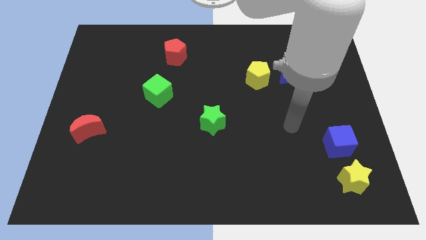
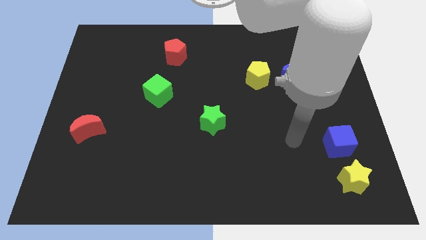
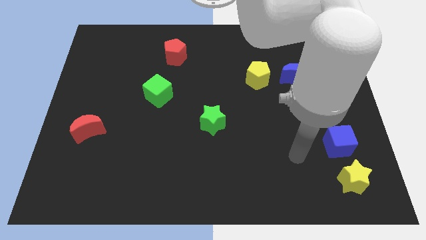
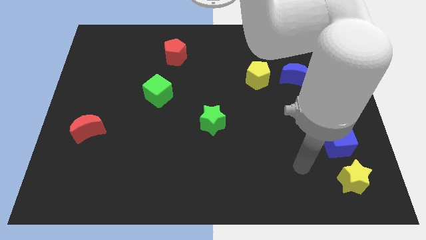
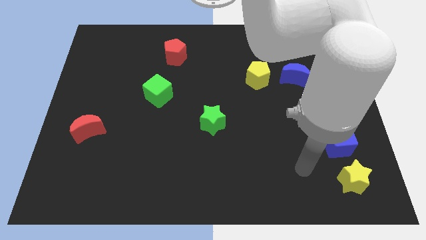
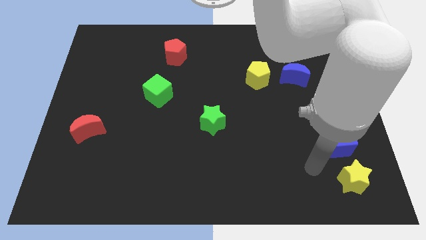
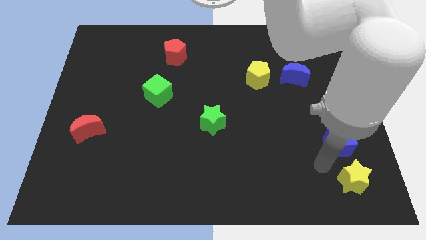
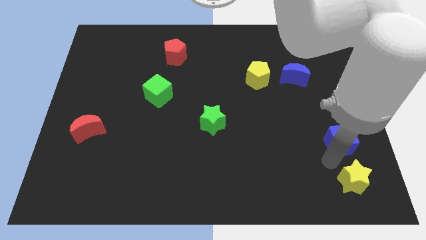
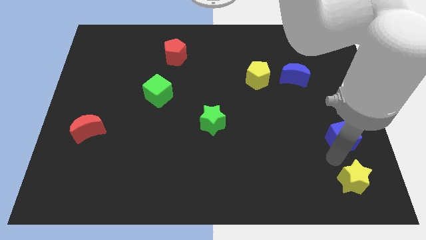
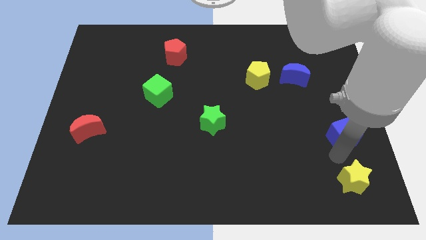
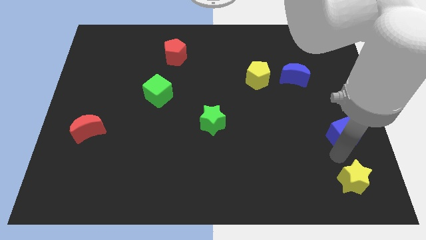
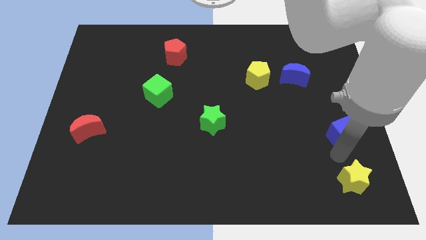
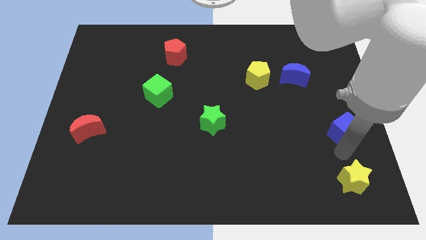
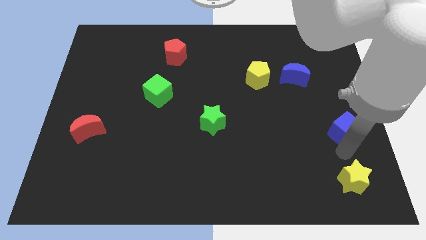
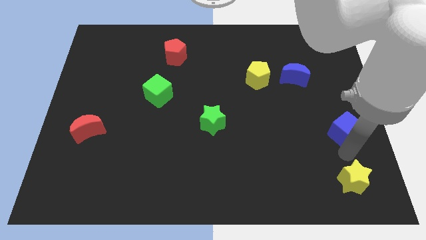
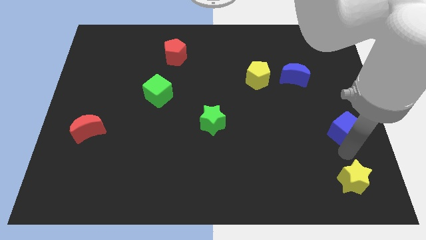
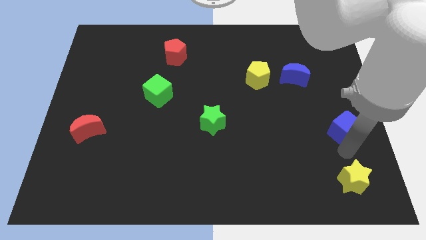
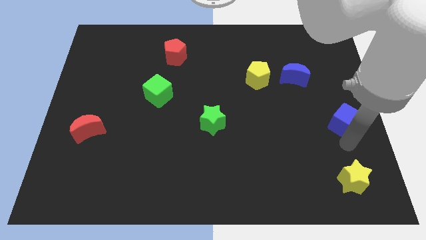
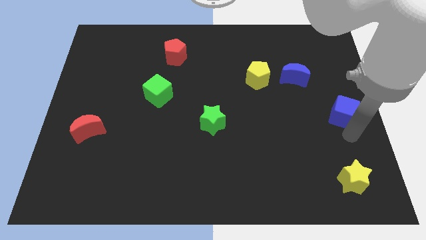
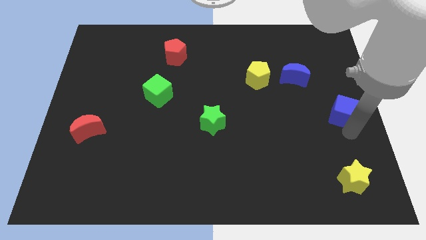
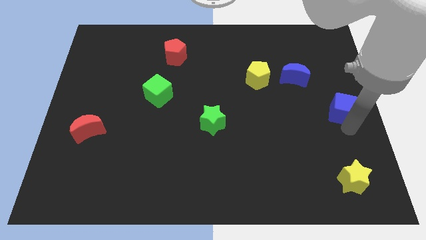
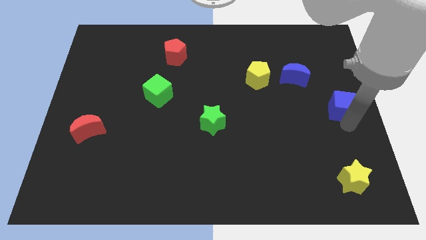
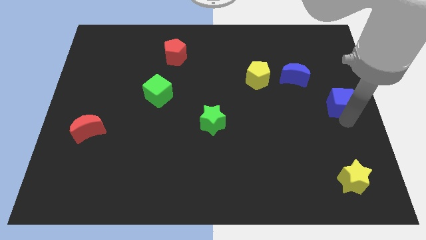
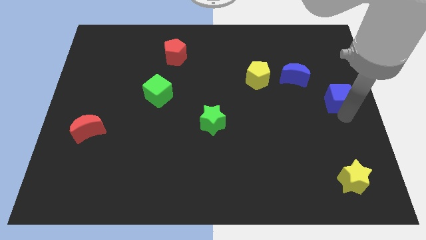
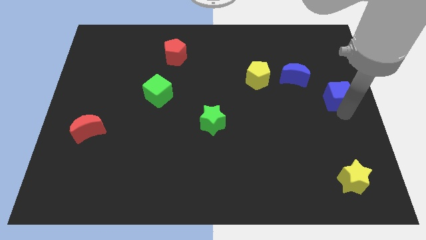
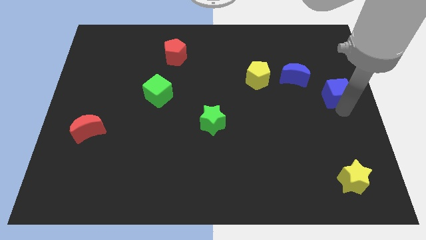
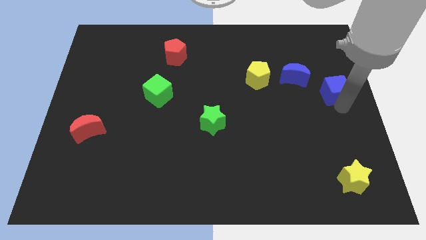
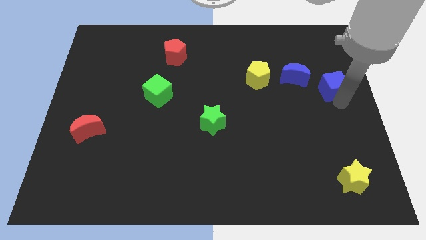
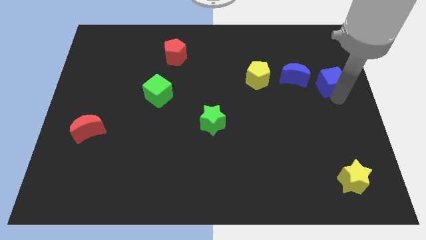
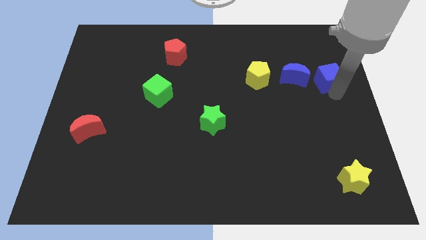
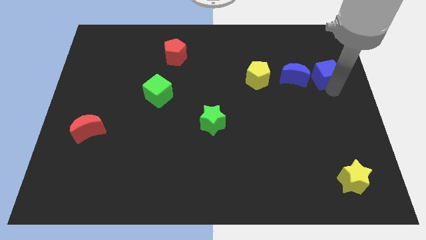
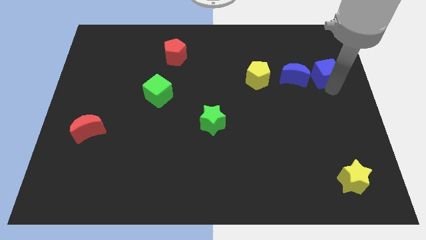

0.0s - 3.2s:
push blue cube beside blue crescent

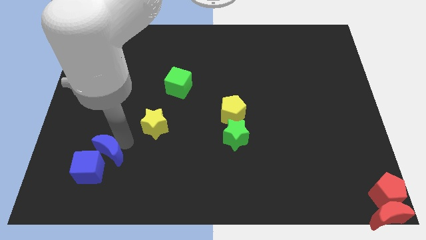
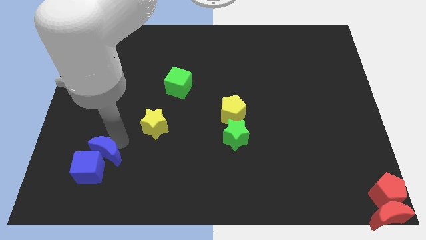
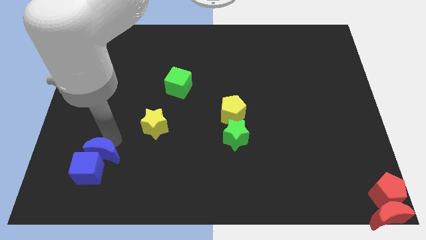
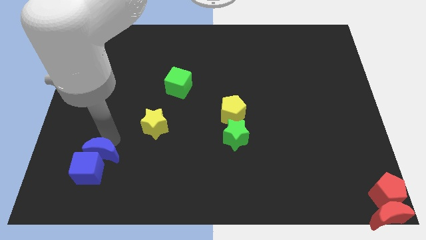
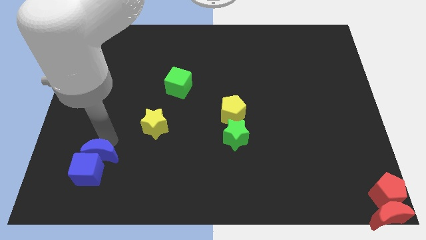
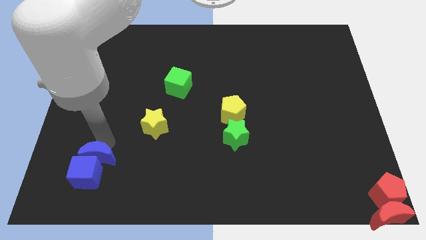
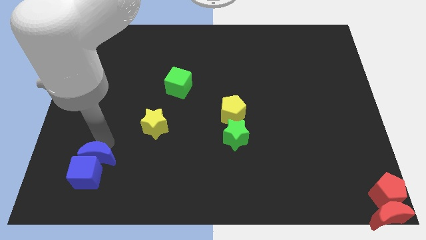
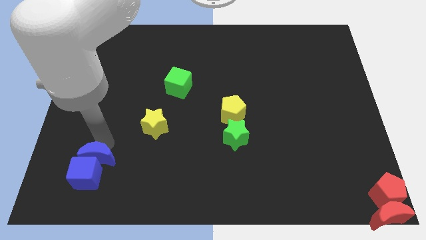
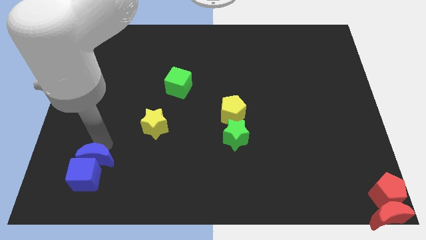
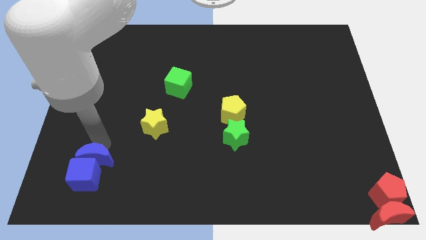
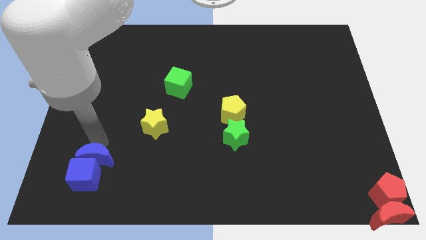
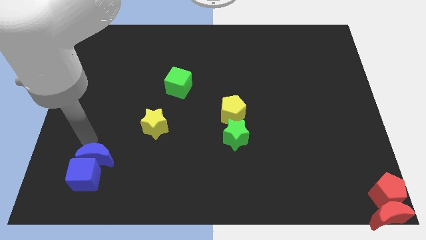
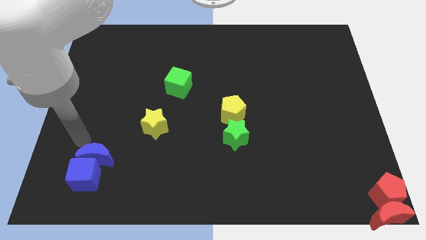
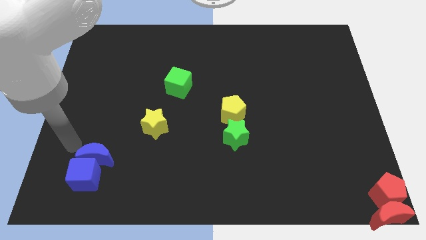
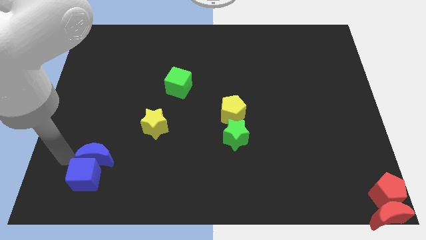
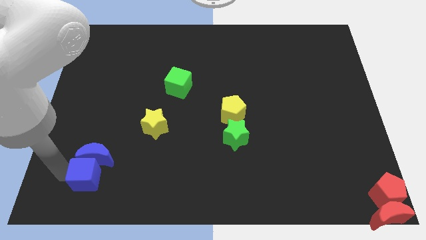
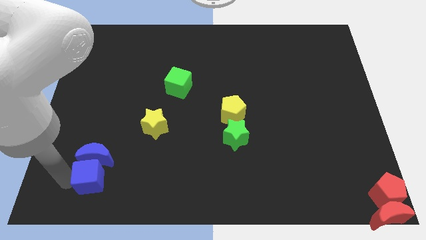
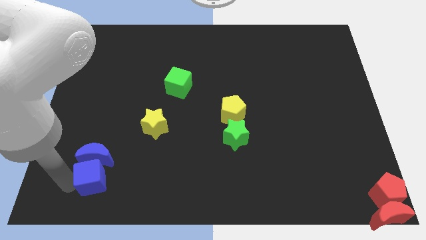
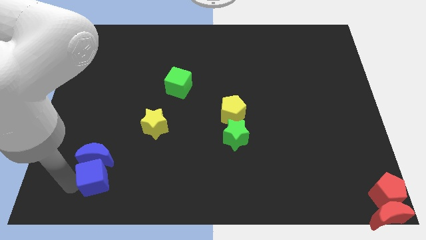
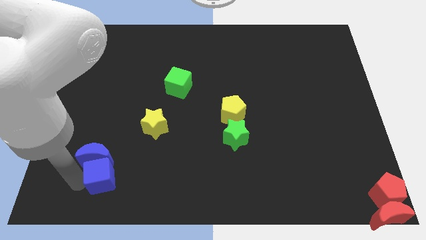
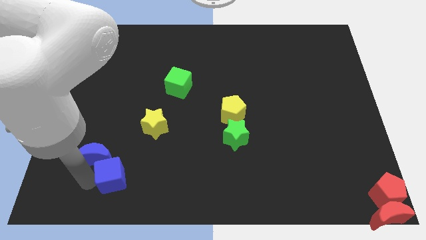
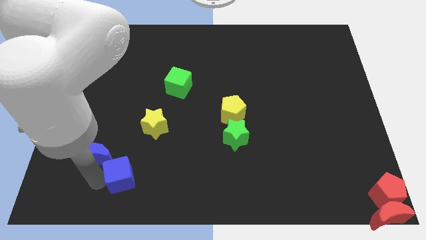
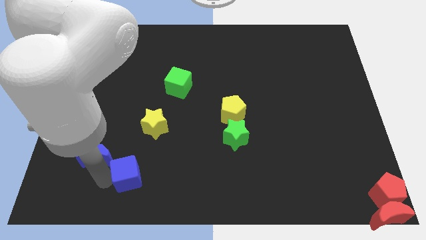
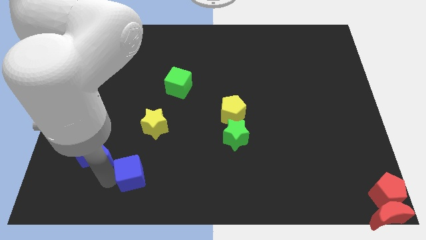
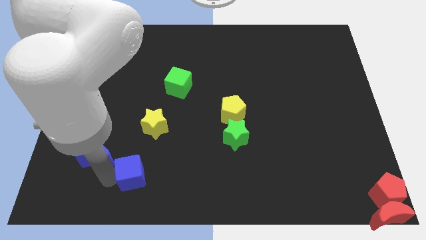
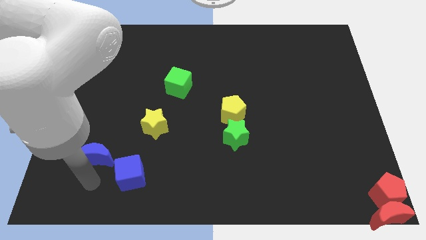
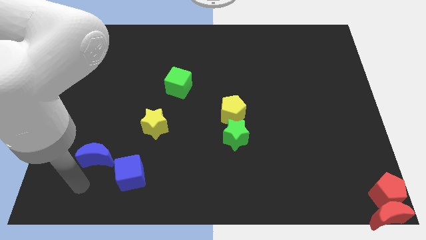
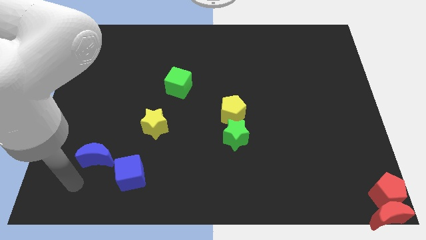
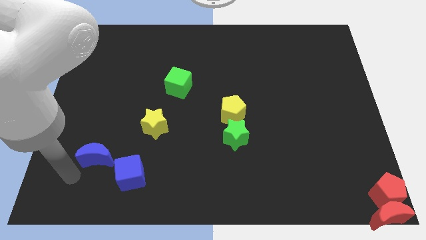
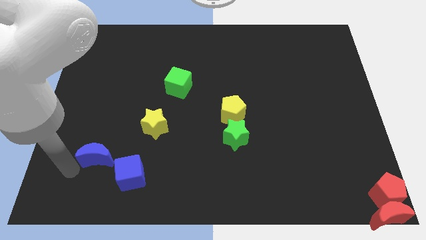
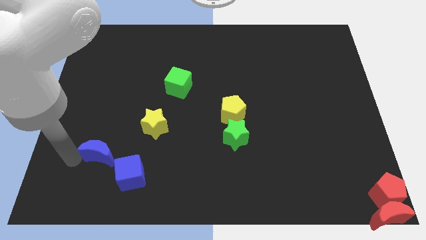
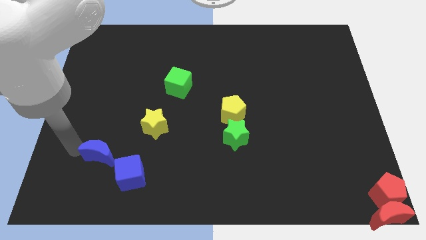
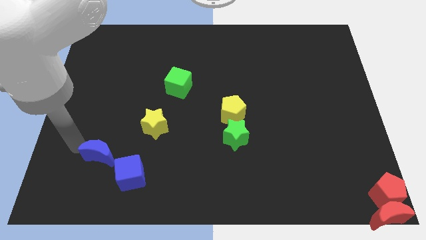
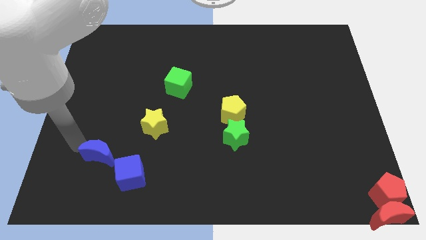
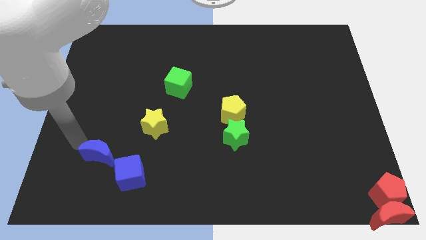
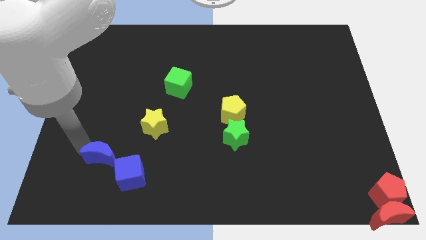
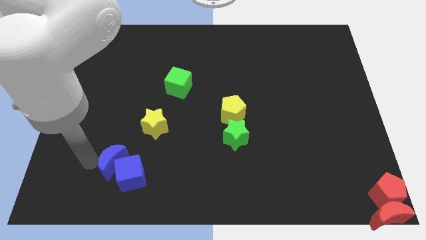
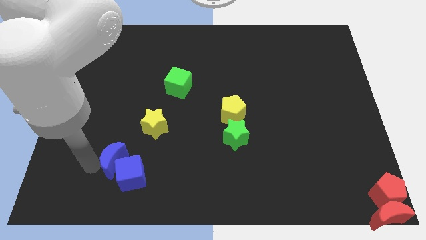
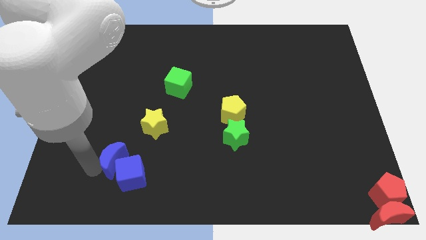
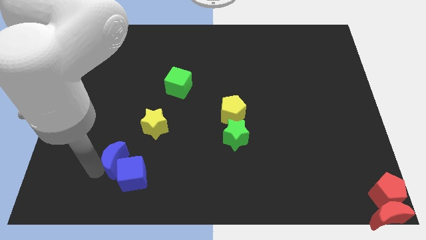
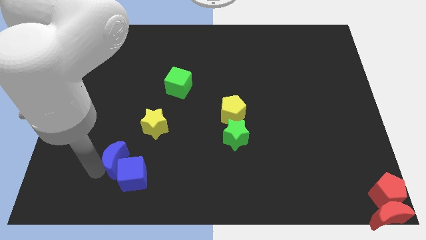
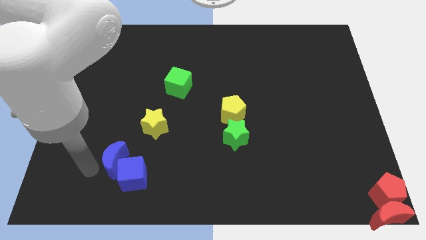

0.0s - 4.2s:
move the blue blocks slightly right of the board

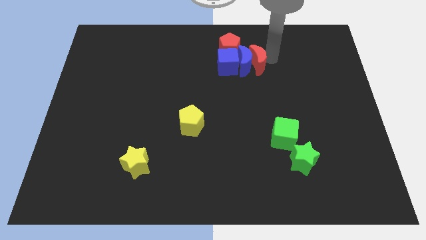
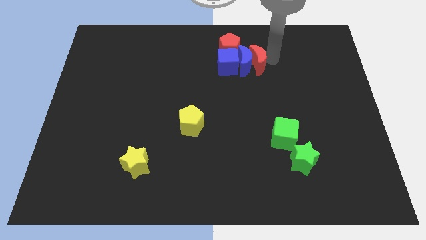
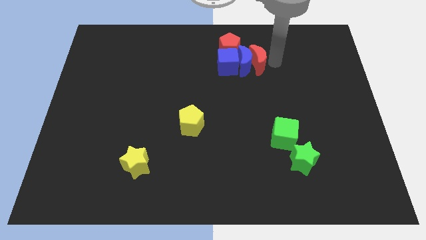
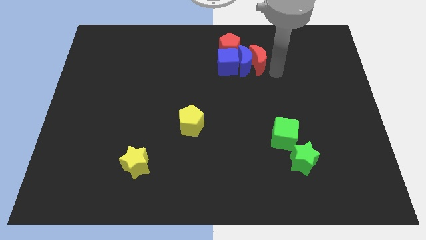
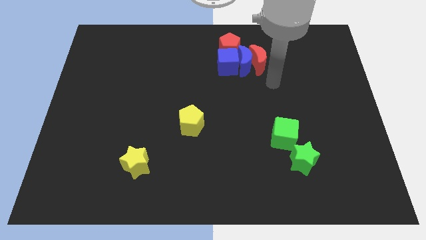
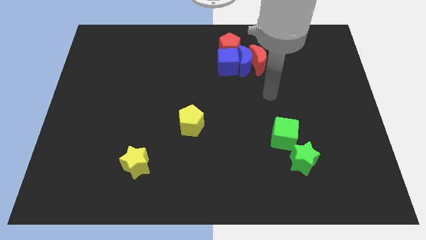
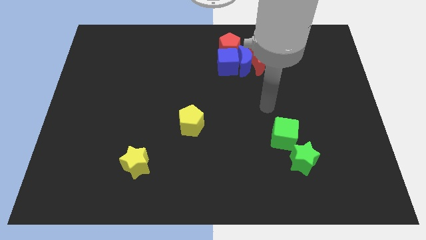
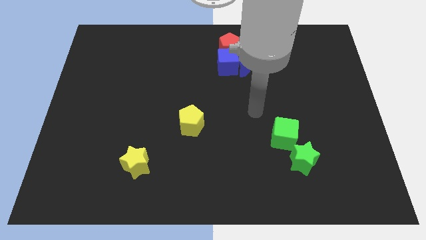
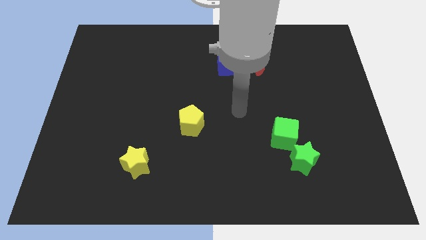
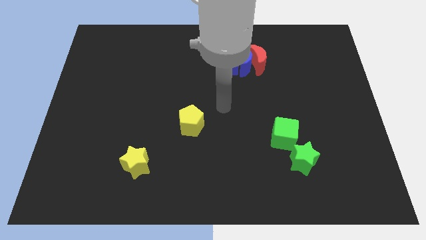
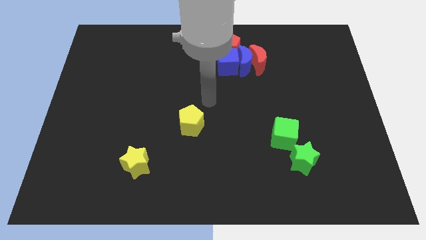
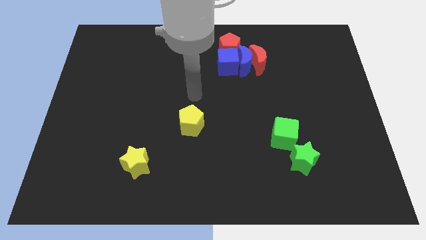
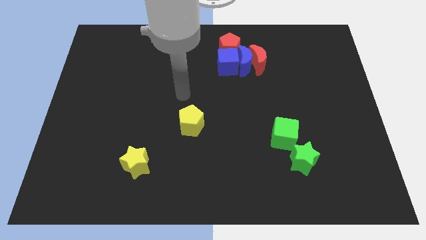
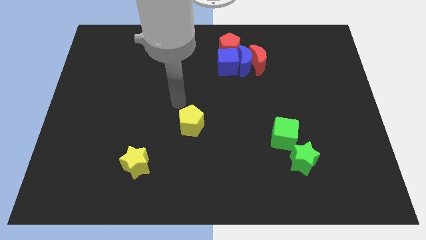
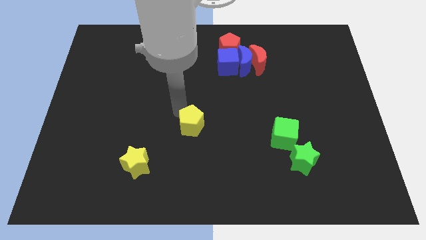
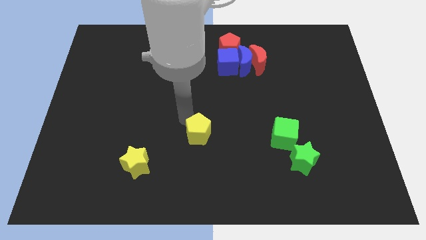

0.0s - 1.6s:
place the arm above the yellow pentagon

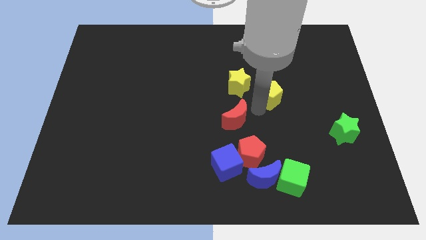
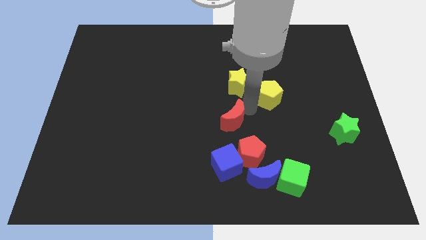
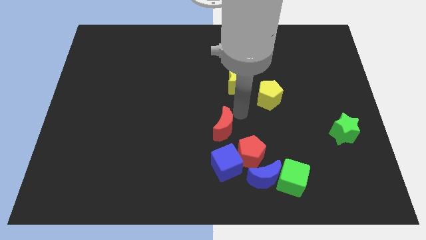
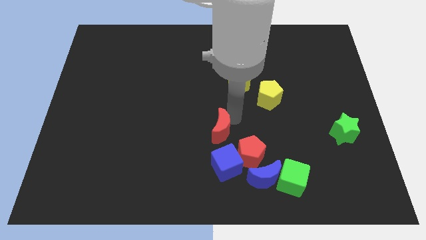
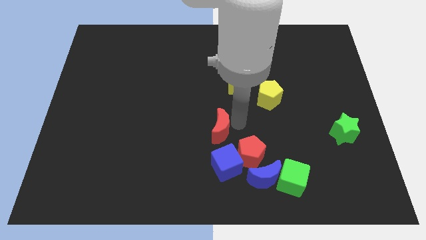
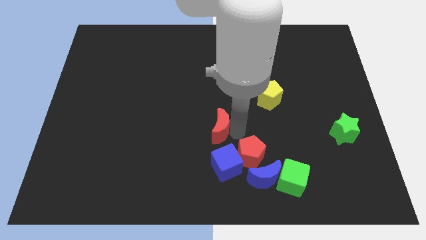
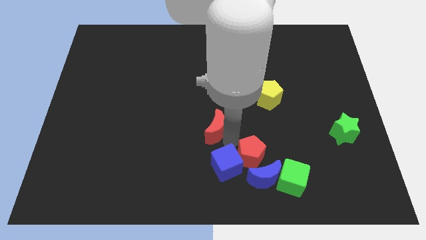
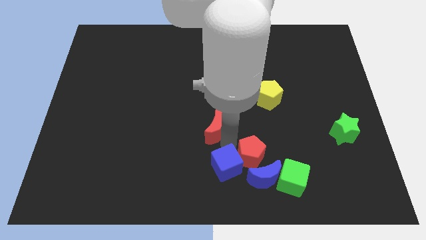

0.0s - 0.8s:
place the red moon above the blue cube
